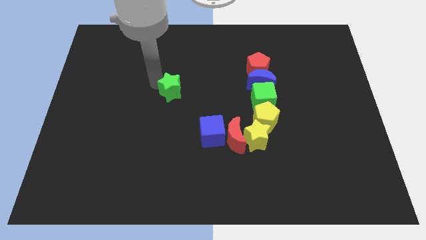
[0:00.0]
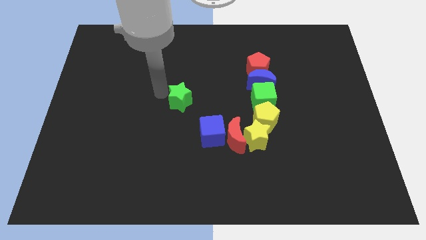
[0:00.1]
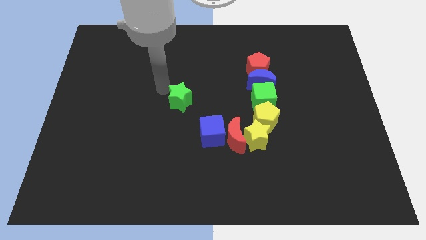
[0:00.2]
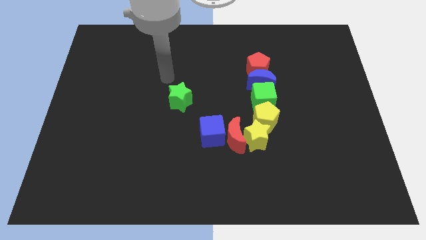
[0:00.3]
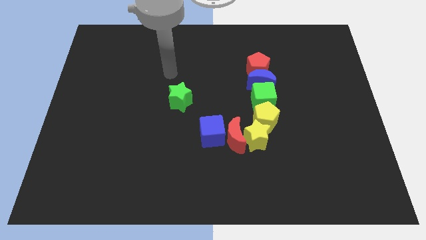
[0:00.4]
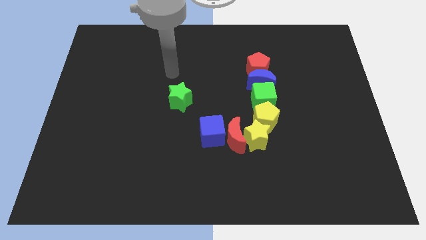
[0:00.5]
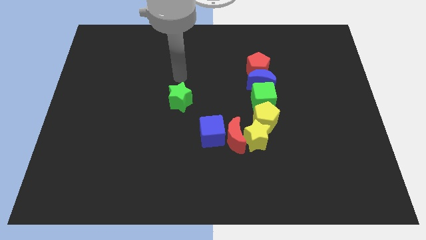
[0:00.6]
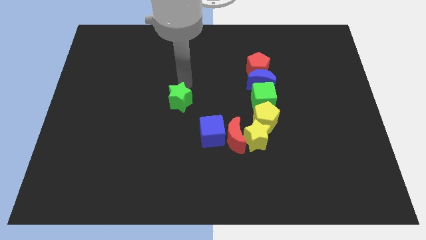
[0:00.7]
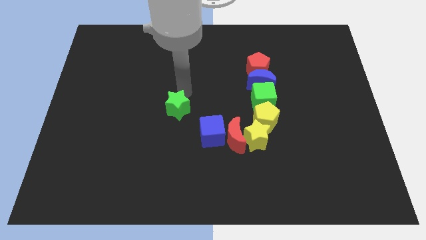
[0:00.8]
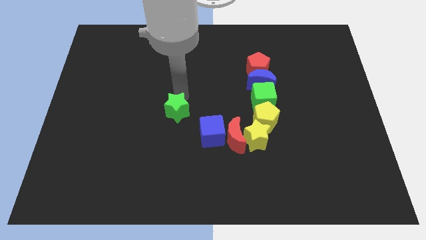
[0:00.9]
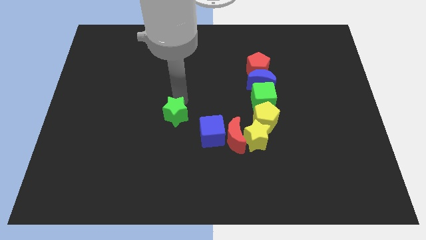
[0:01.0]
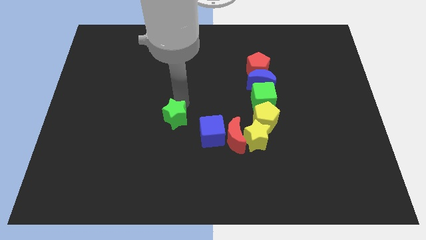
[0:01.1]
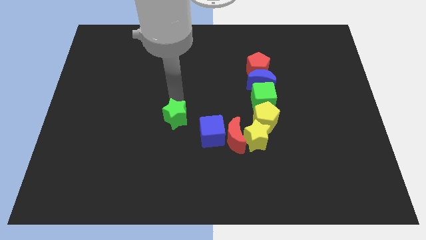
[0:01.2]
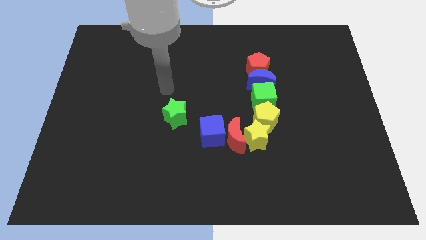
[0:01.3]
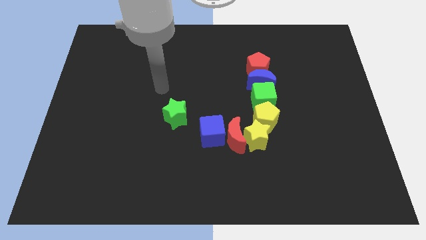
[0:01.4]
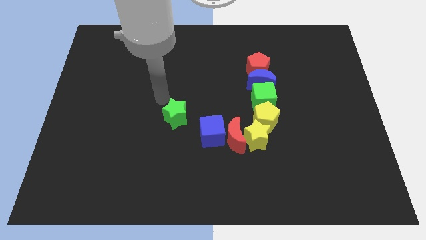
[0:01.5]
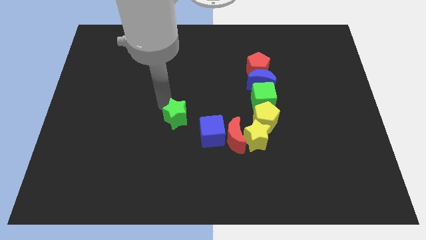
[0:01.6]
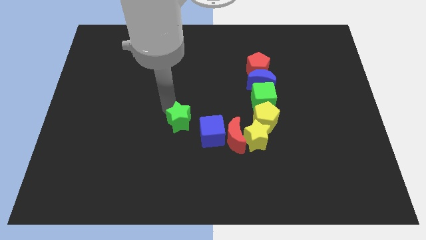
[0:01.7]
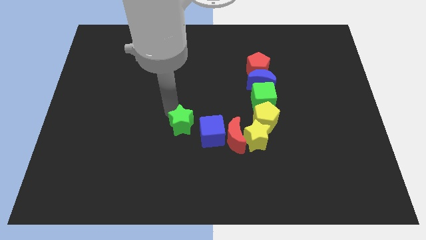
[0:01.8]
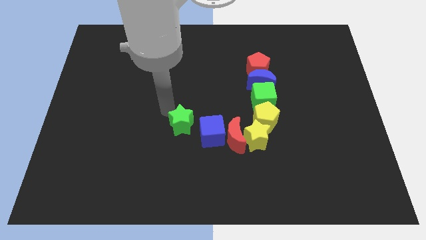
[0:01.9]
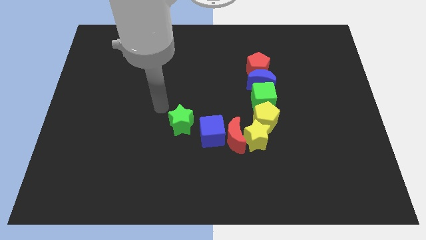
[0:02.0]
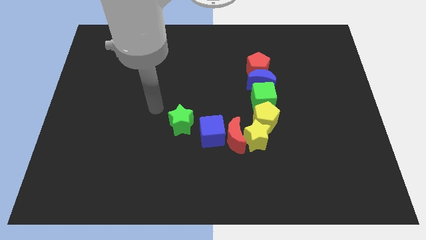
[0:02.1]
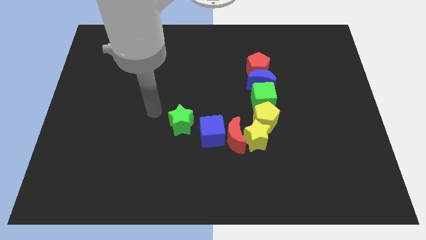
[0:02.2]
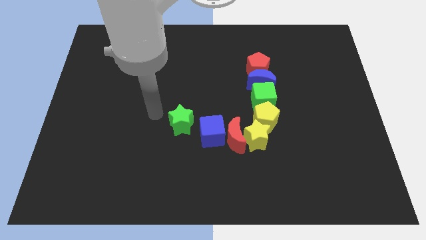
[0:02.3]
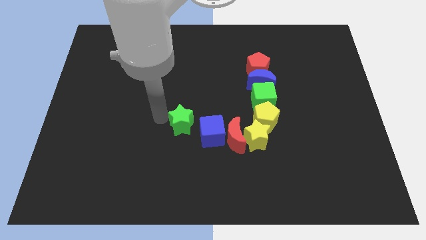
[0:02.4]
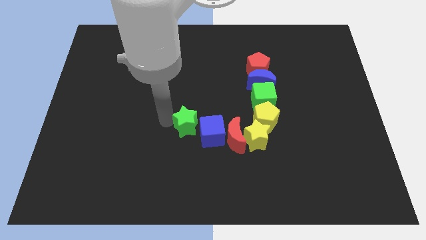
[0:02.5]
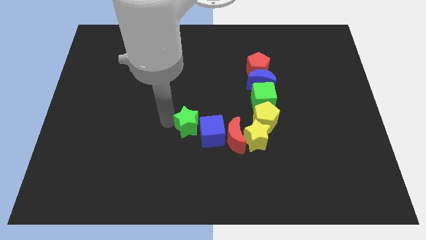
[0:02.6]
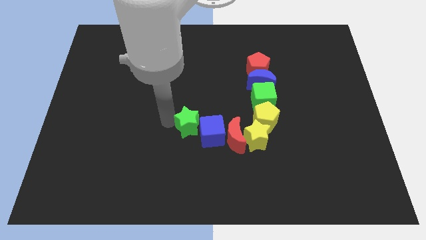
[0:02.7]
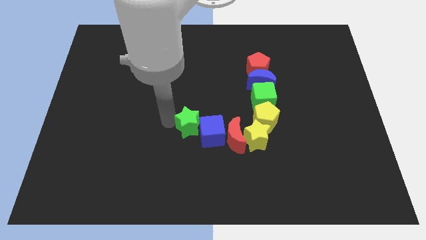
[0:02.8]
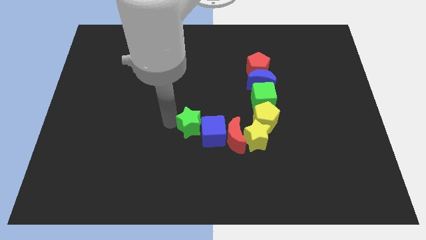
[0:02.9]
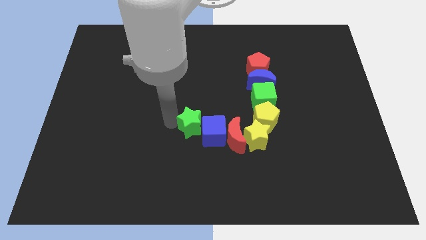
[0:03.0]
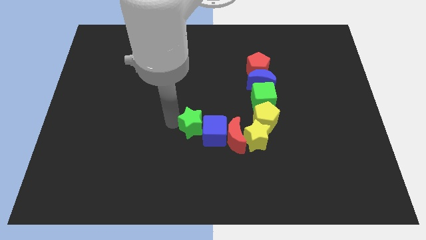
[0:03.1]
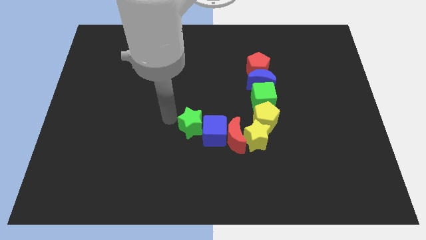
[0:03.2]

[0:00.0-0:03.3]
push the green star into the left side of the blue cube

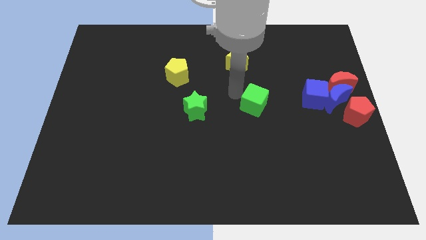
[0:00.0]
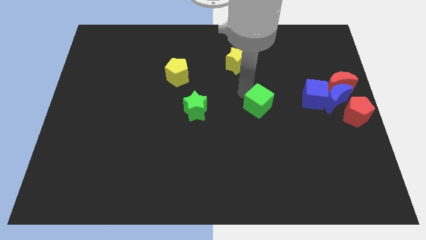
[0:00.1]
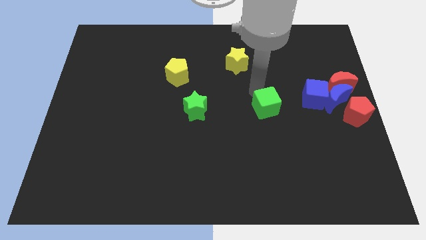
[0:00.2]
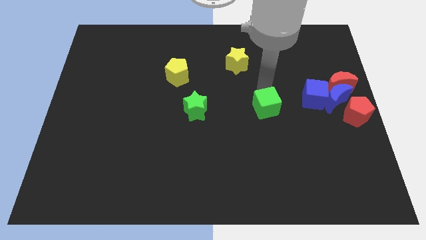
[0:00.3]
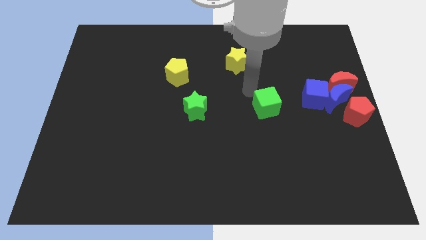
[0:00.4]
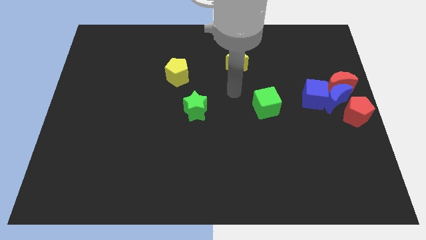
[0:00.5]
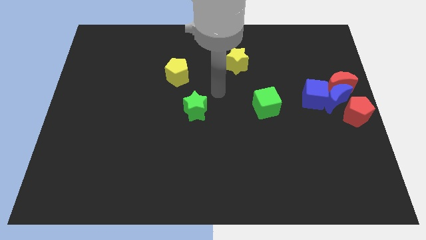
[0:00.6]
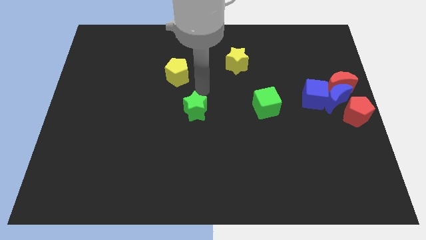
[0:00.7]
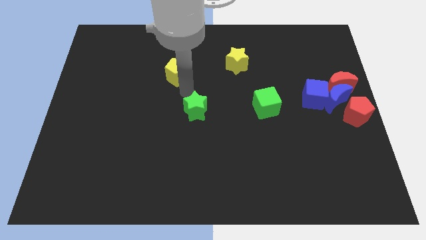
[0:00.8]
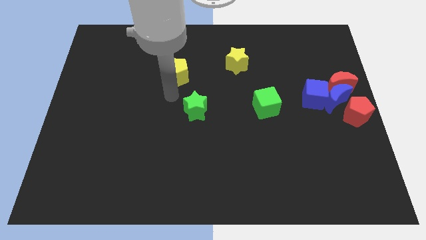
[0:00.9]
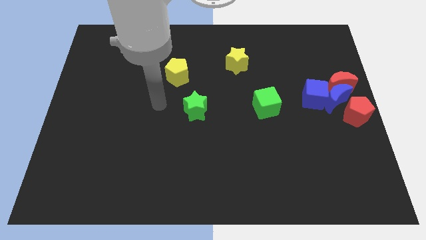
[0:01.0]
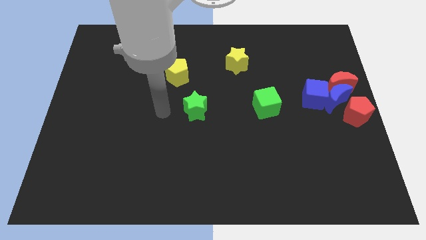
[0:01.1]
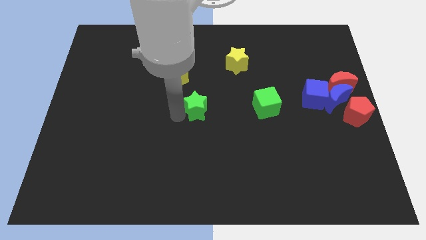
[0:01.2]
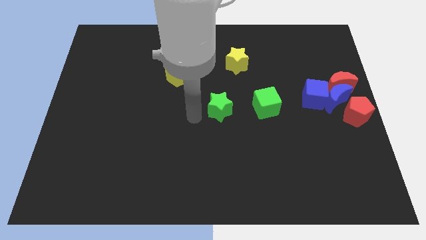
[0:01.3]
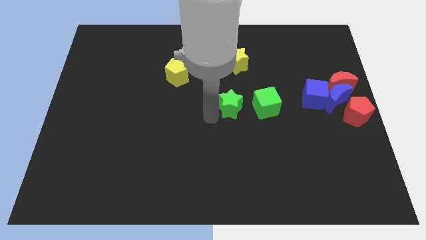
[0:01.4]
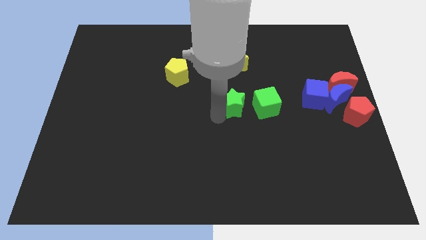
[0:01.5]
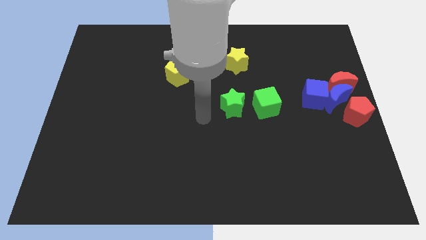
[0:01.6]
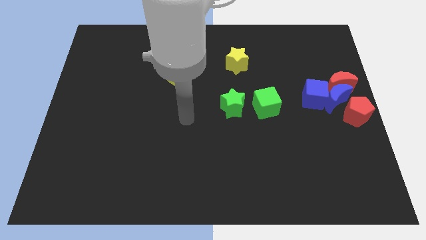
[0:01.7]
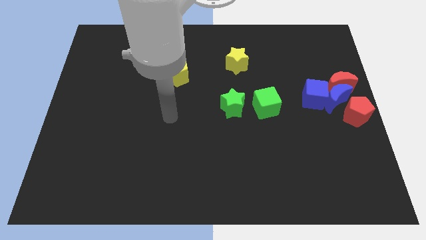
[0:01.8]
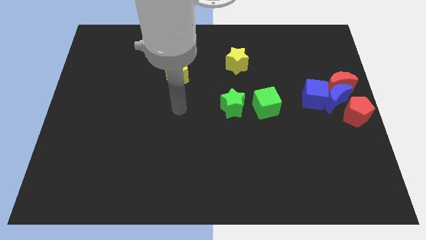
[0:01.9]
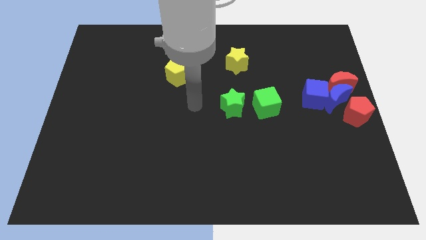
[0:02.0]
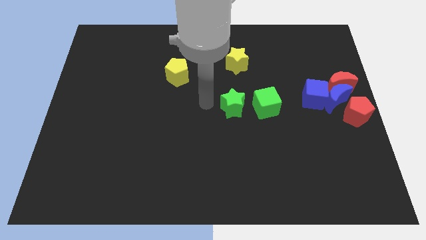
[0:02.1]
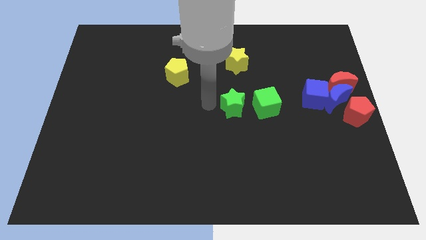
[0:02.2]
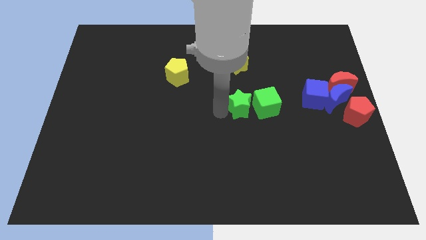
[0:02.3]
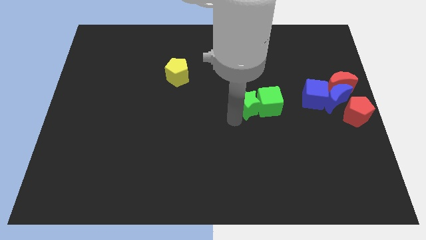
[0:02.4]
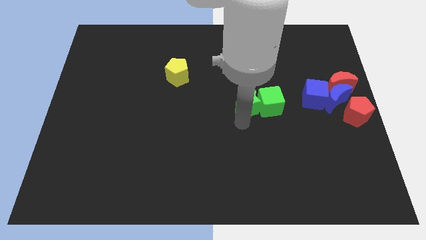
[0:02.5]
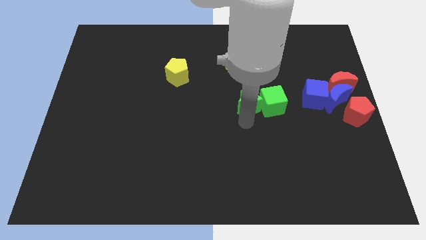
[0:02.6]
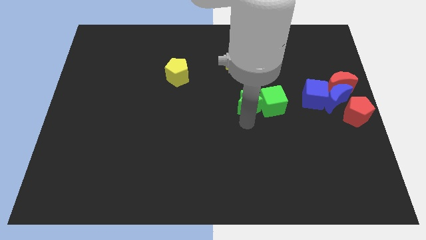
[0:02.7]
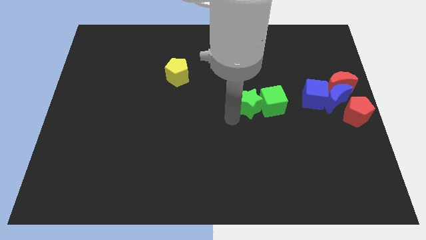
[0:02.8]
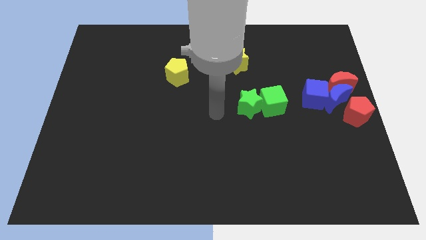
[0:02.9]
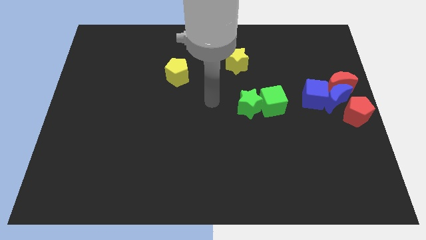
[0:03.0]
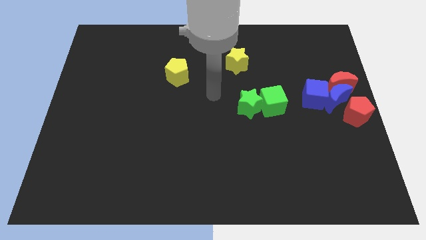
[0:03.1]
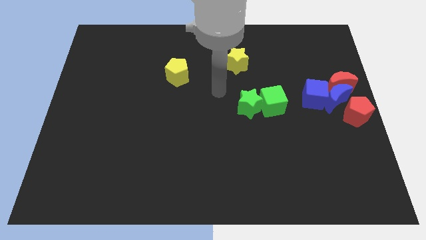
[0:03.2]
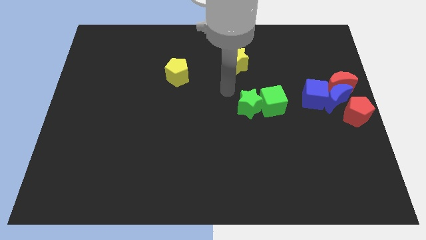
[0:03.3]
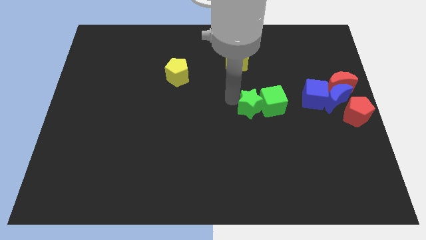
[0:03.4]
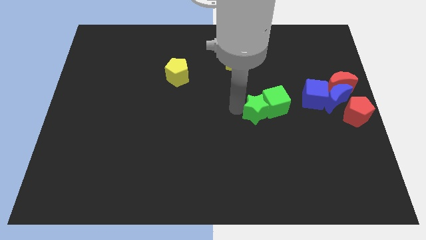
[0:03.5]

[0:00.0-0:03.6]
push green star into the green cube

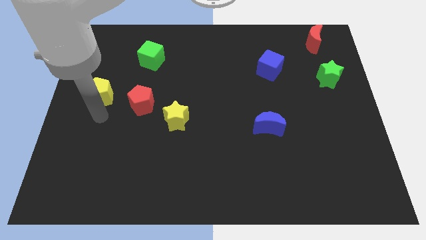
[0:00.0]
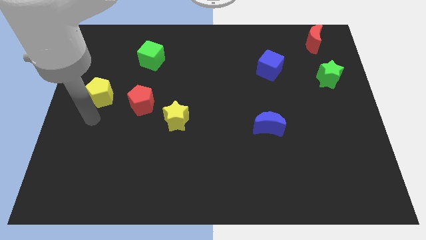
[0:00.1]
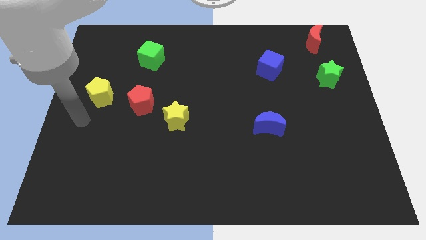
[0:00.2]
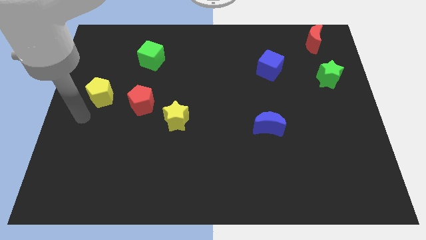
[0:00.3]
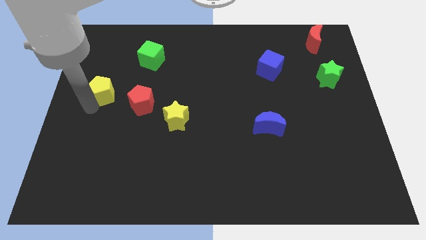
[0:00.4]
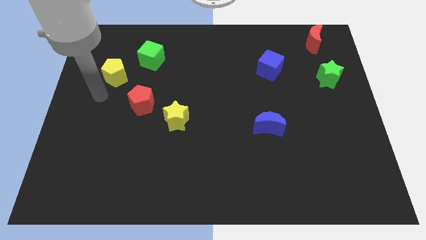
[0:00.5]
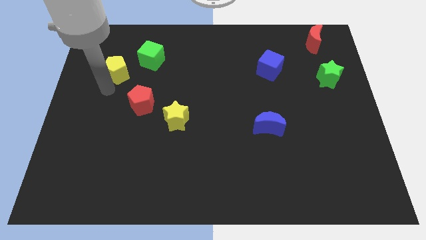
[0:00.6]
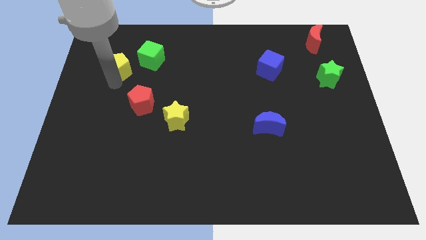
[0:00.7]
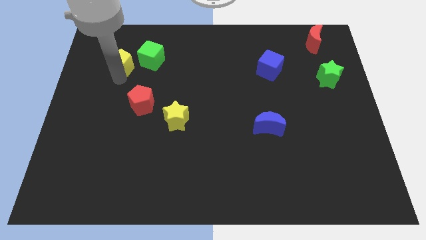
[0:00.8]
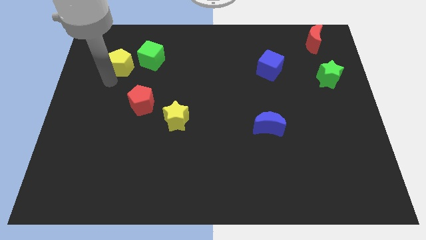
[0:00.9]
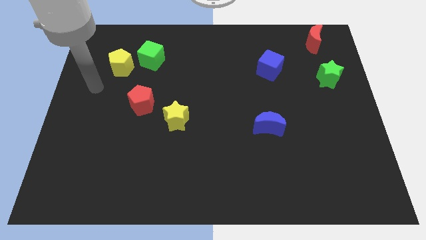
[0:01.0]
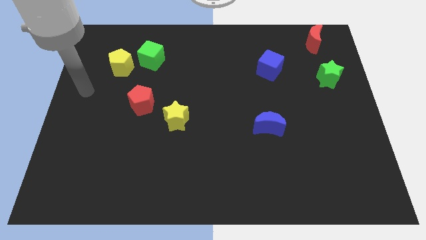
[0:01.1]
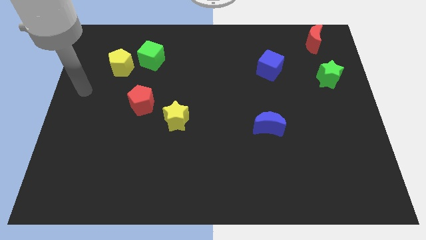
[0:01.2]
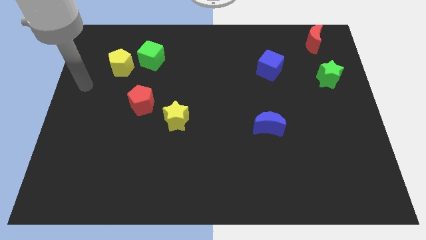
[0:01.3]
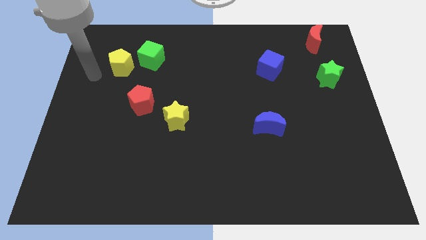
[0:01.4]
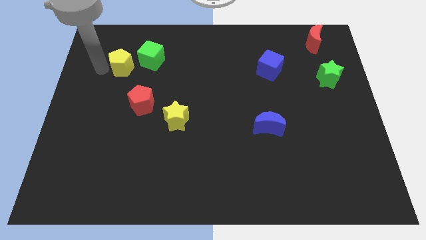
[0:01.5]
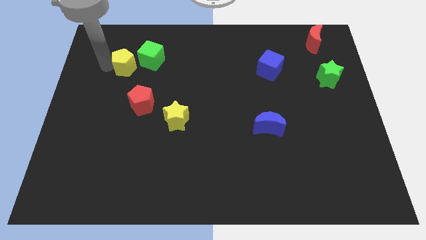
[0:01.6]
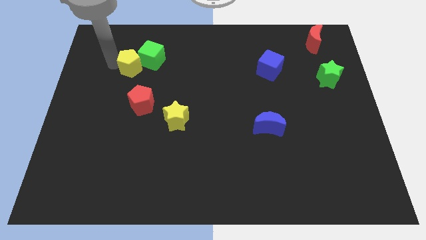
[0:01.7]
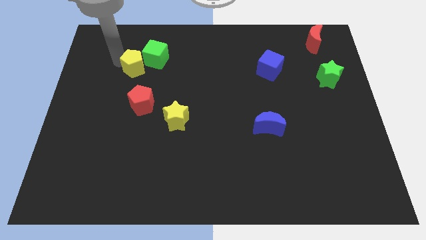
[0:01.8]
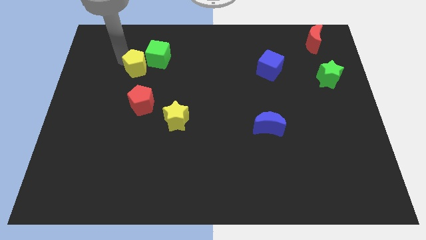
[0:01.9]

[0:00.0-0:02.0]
push the yellow pentagon into the green cube
